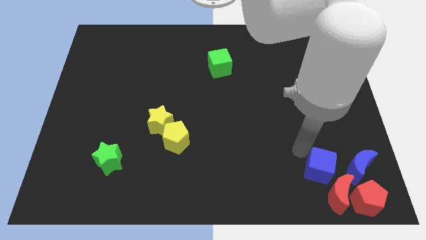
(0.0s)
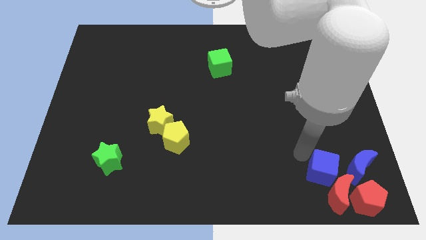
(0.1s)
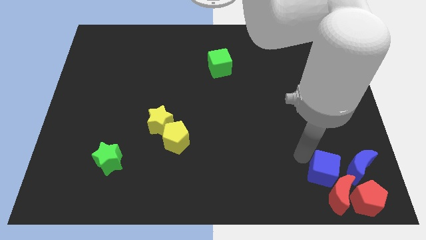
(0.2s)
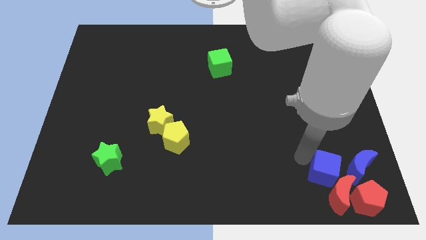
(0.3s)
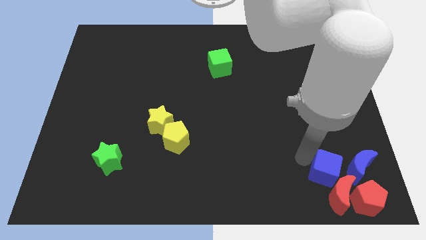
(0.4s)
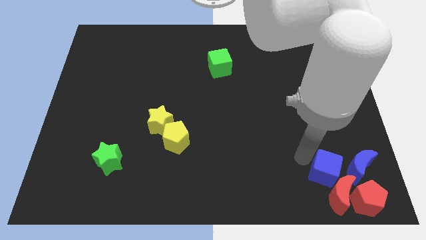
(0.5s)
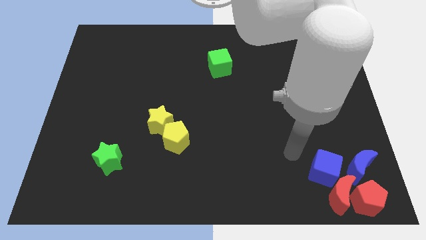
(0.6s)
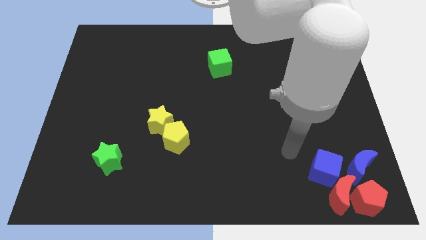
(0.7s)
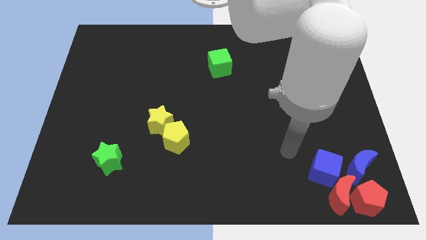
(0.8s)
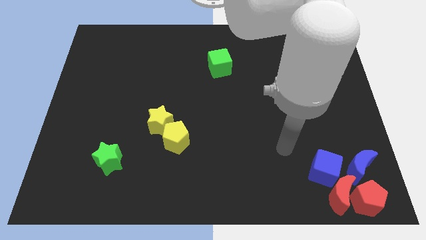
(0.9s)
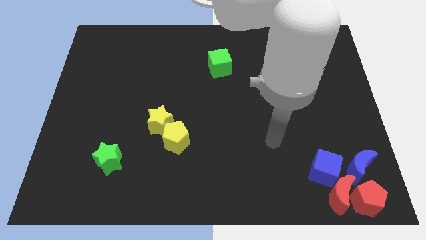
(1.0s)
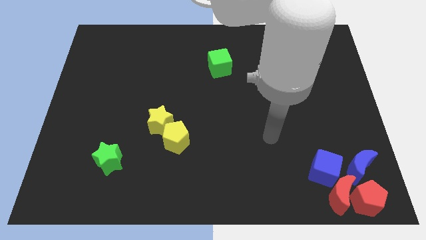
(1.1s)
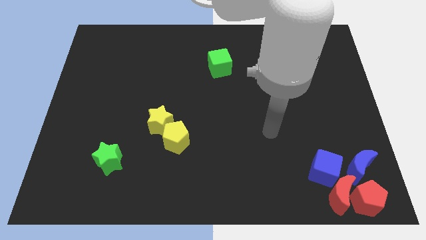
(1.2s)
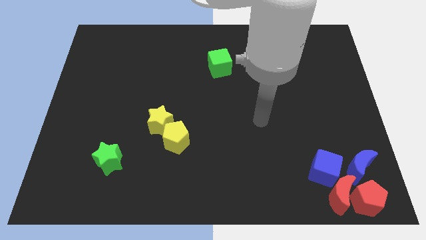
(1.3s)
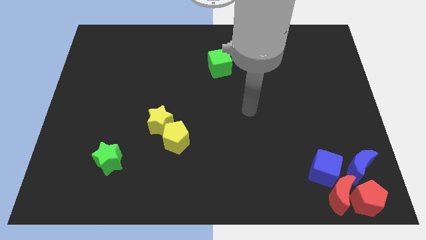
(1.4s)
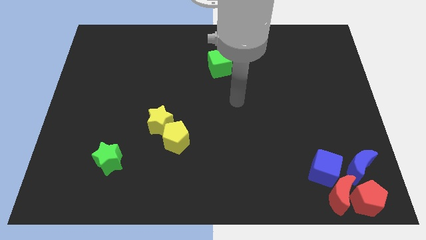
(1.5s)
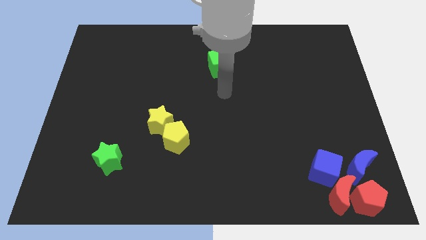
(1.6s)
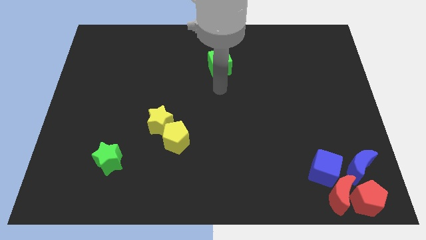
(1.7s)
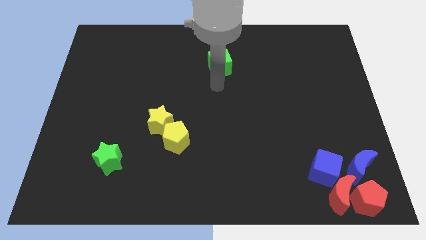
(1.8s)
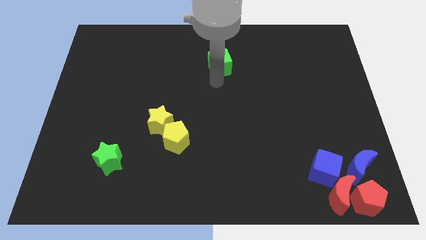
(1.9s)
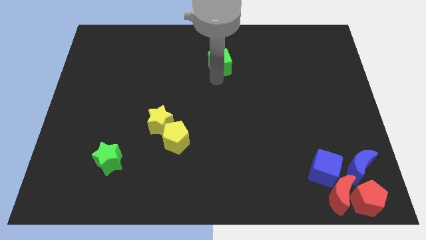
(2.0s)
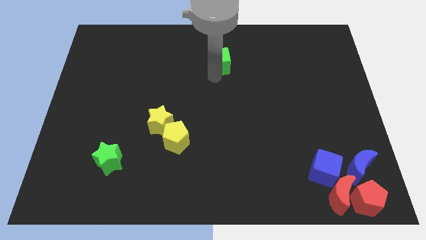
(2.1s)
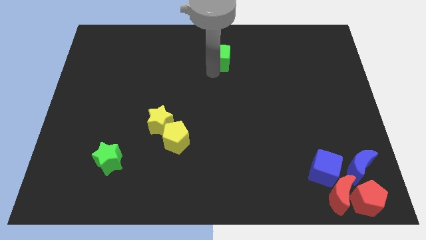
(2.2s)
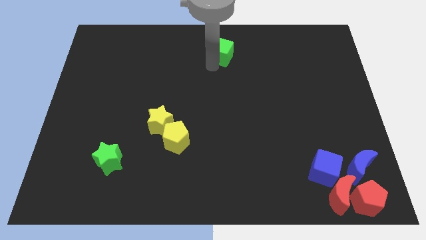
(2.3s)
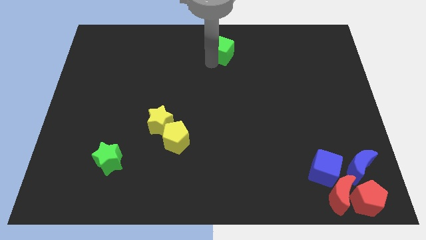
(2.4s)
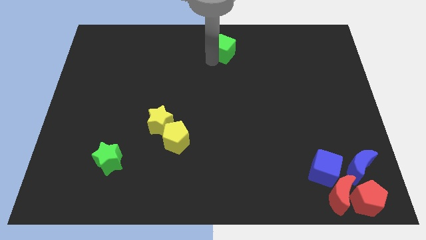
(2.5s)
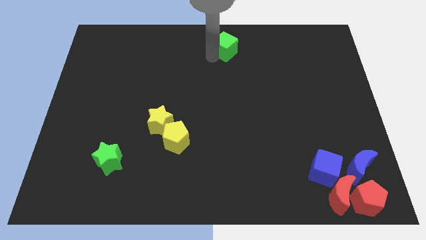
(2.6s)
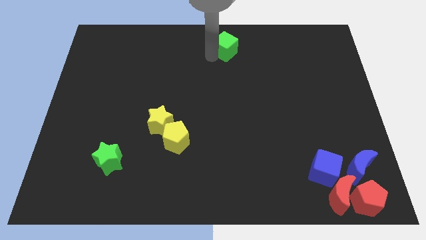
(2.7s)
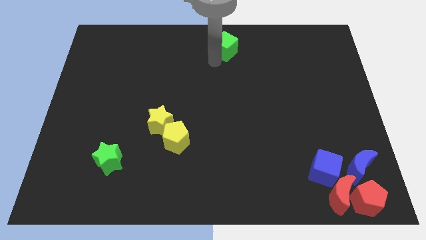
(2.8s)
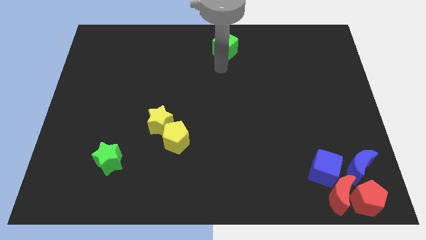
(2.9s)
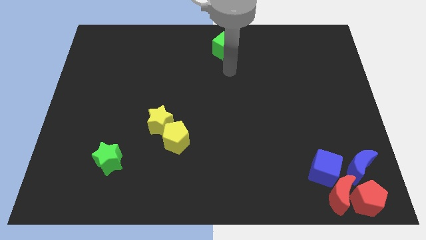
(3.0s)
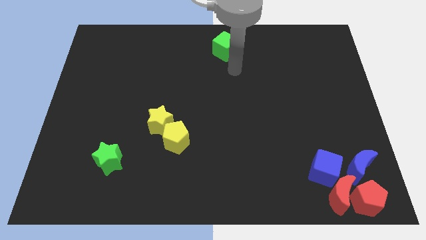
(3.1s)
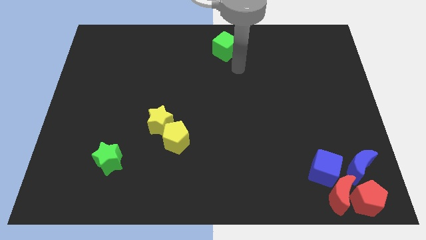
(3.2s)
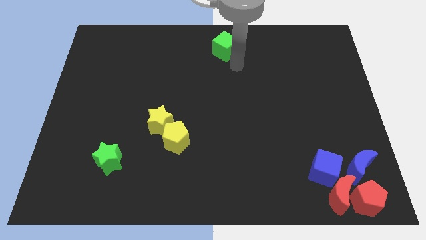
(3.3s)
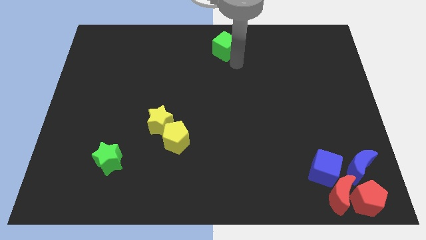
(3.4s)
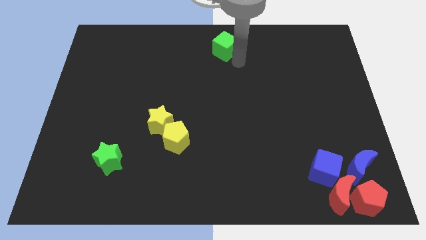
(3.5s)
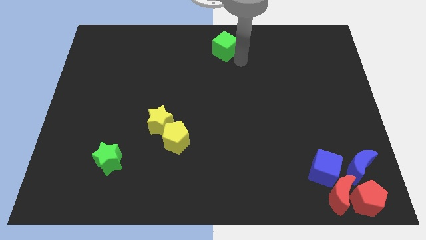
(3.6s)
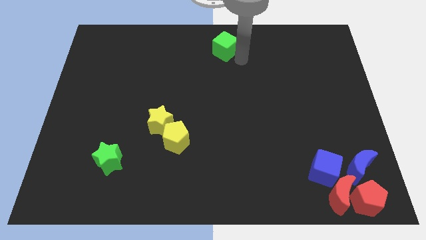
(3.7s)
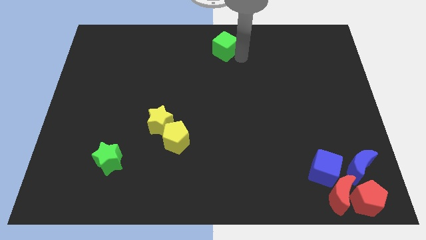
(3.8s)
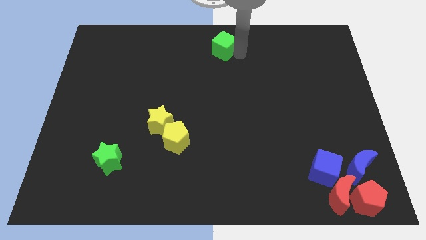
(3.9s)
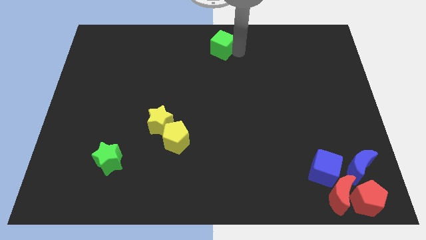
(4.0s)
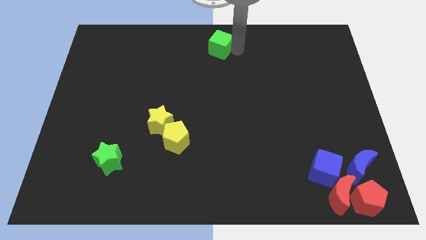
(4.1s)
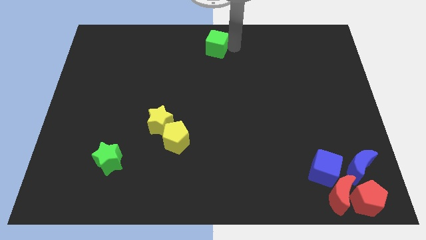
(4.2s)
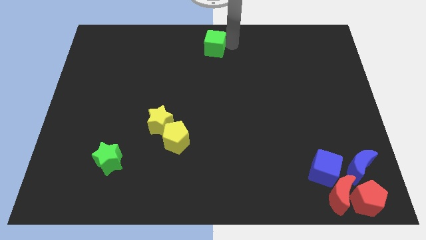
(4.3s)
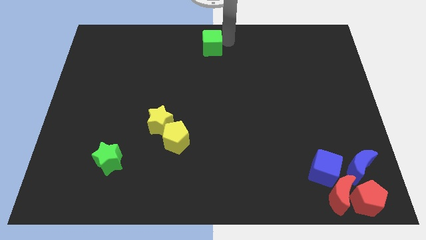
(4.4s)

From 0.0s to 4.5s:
adjust the green cube near the top center of the board

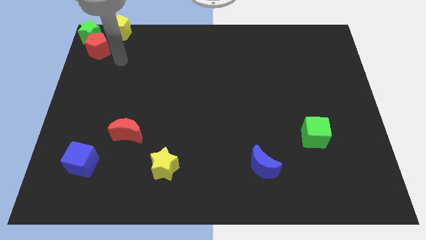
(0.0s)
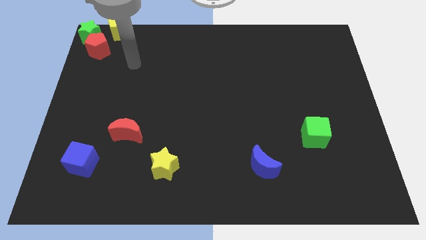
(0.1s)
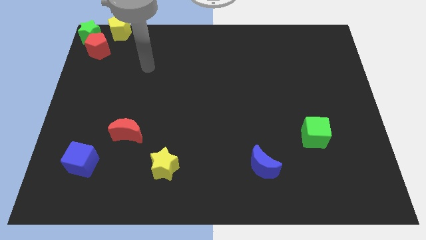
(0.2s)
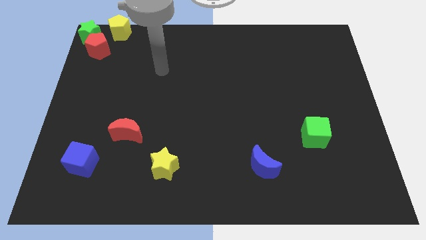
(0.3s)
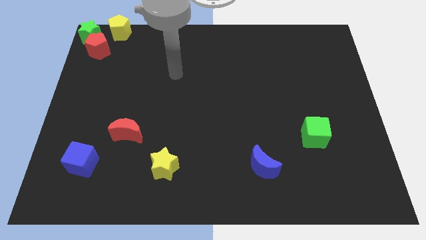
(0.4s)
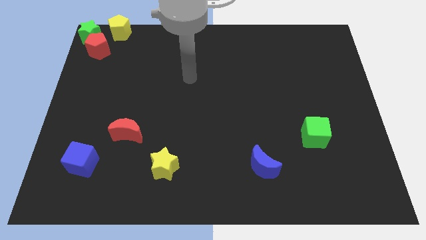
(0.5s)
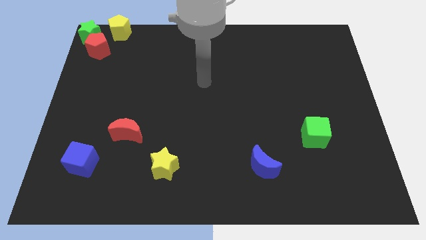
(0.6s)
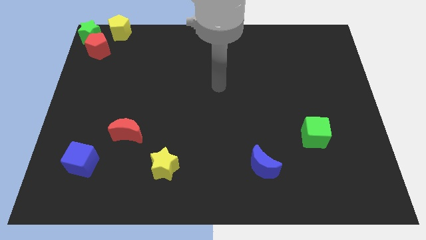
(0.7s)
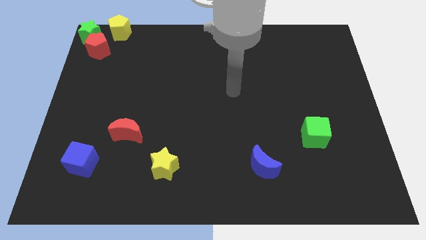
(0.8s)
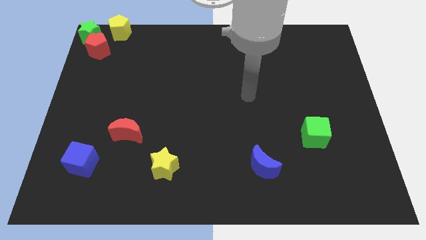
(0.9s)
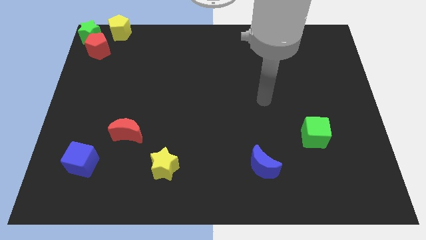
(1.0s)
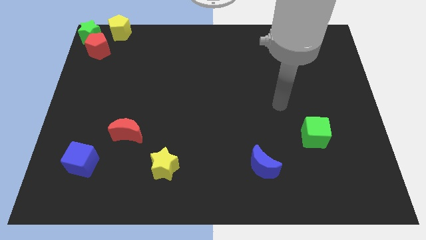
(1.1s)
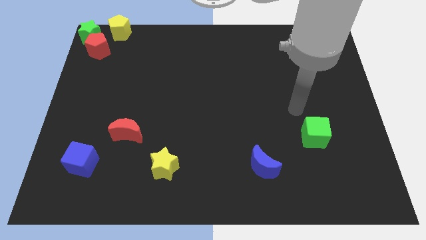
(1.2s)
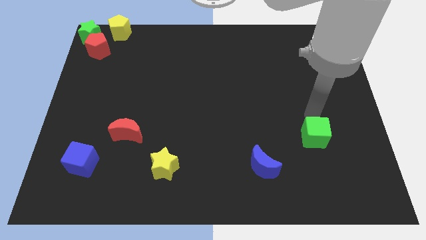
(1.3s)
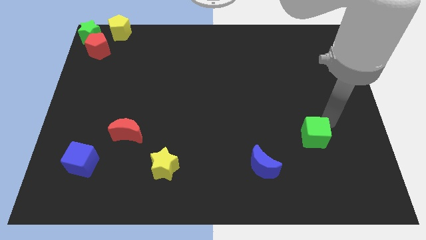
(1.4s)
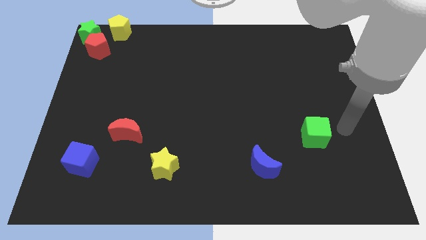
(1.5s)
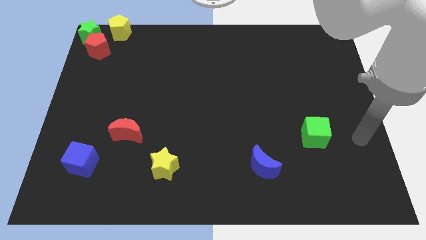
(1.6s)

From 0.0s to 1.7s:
point your arm to the right of green cube

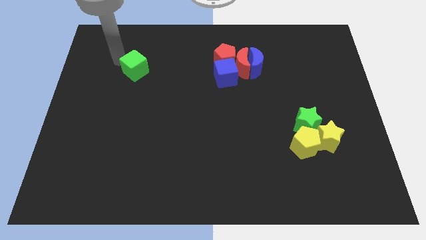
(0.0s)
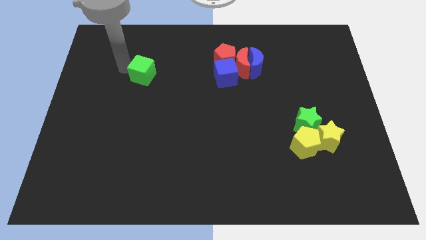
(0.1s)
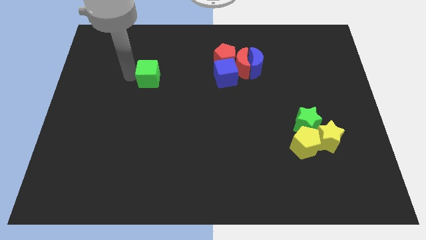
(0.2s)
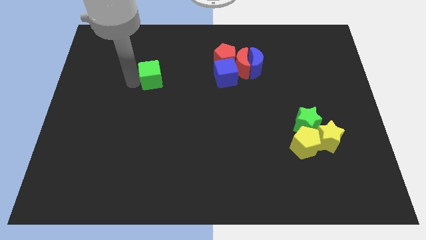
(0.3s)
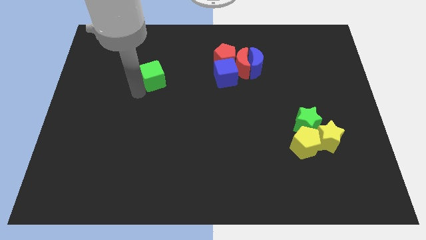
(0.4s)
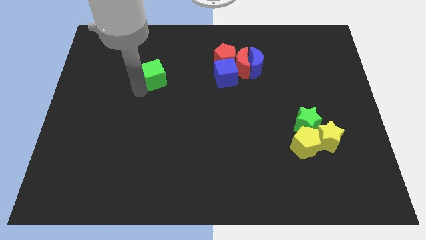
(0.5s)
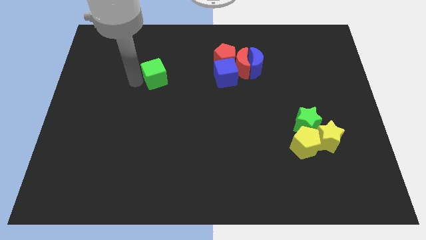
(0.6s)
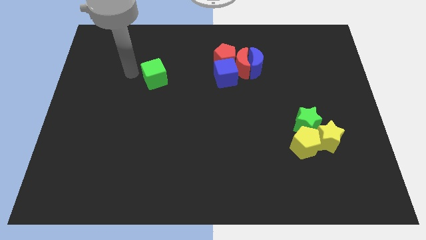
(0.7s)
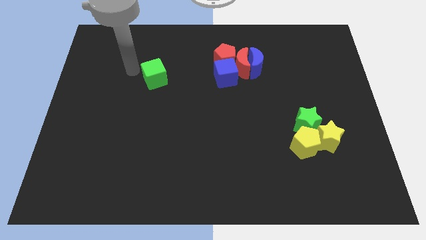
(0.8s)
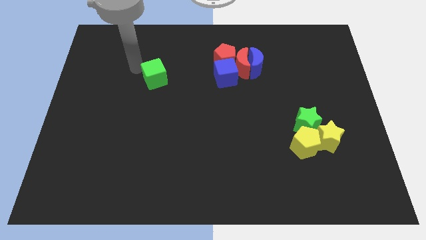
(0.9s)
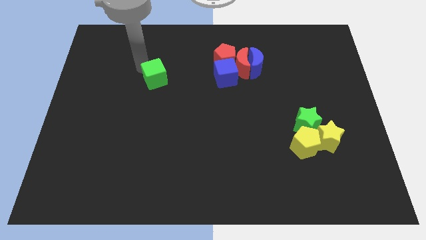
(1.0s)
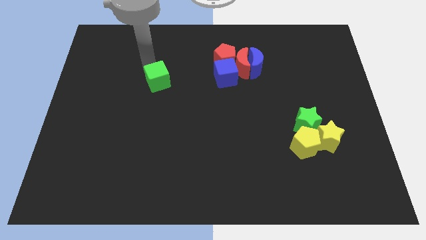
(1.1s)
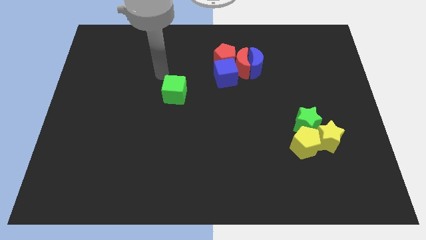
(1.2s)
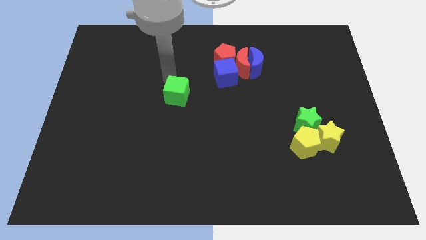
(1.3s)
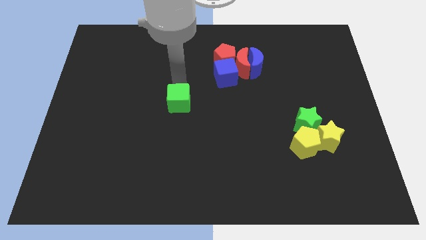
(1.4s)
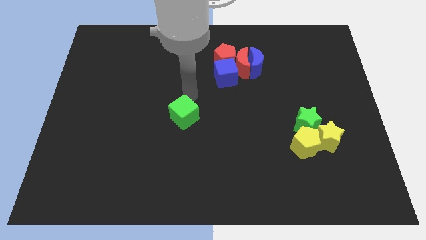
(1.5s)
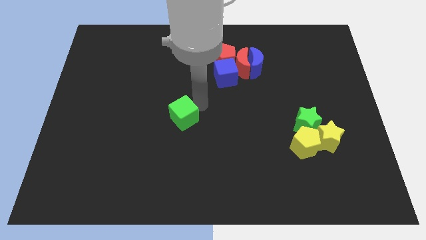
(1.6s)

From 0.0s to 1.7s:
place the green cube towards the middle of the board

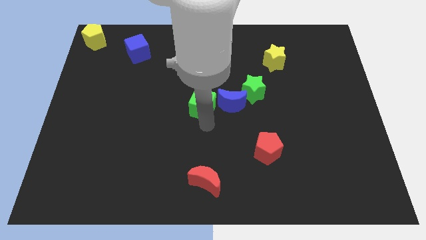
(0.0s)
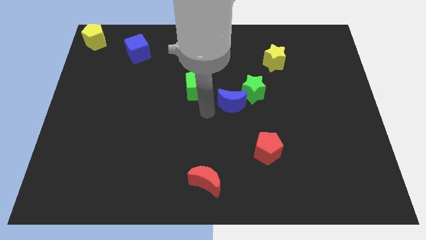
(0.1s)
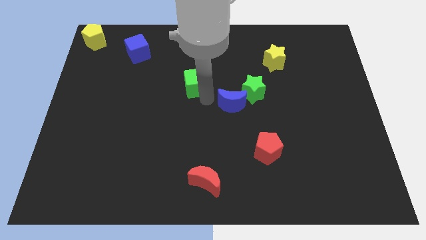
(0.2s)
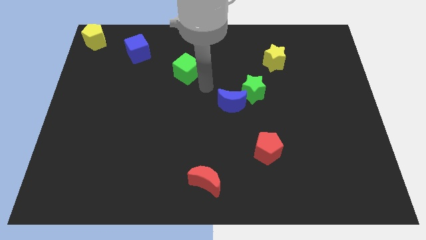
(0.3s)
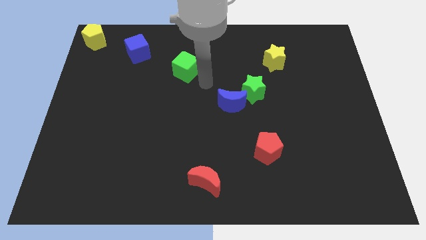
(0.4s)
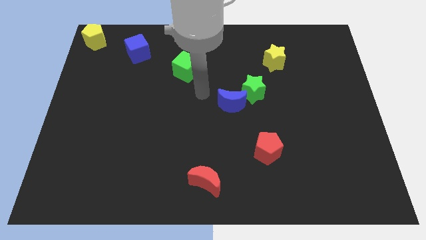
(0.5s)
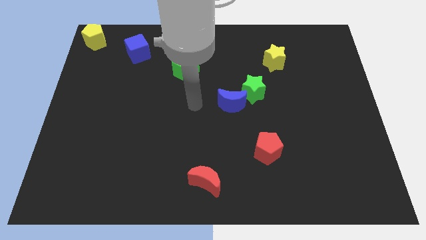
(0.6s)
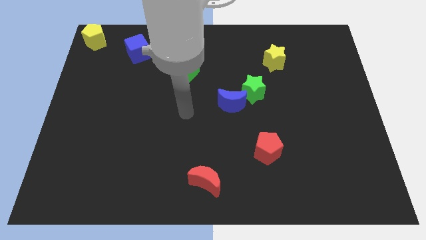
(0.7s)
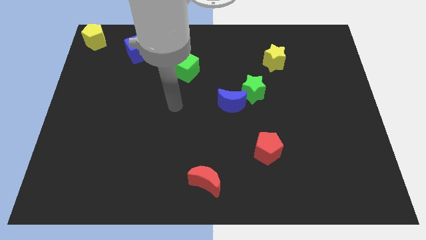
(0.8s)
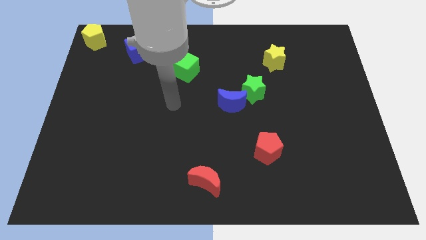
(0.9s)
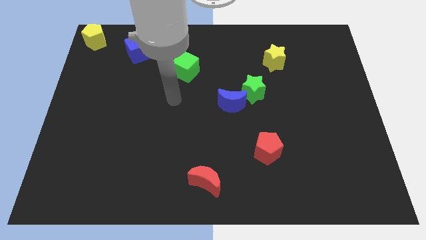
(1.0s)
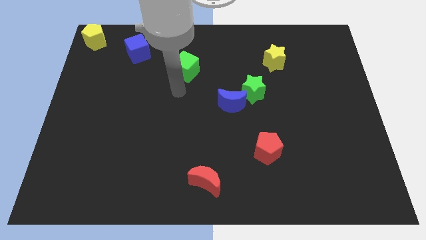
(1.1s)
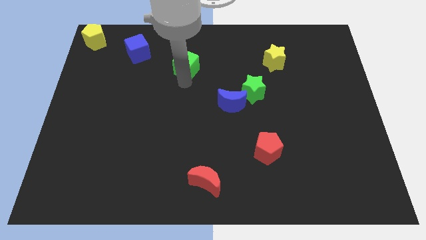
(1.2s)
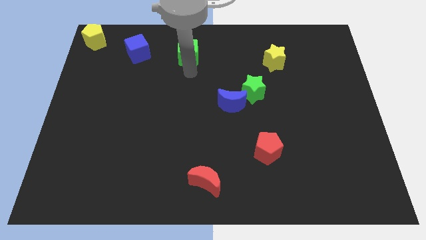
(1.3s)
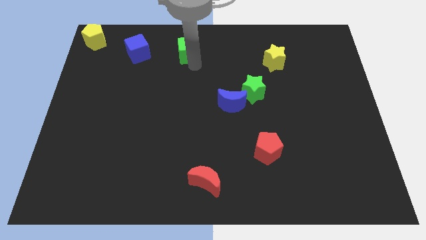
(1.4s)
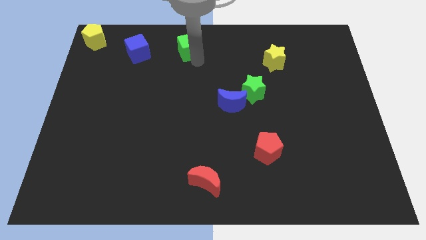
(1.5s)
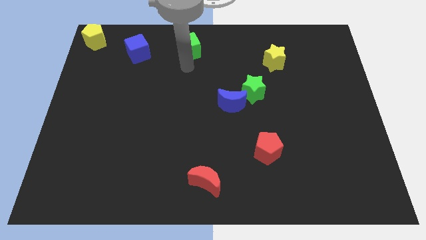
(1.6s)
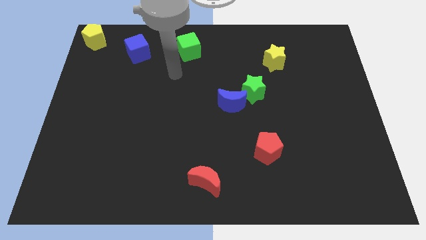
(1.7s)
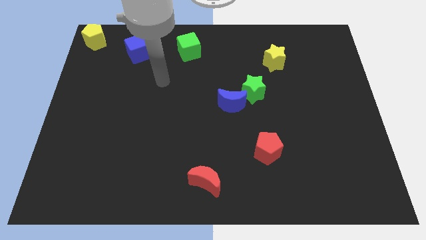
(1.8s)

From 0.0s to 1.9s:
push the green block towards the top center side
